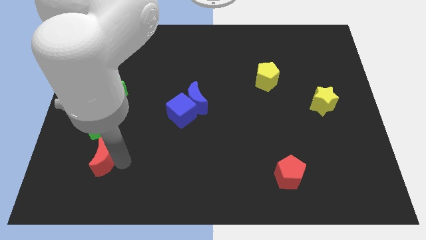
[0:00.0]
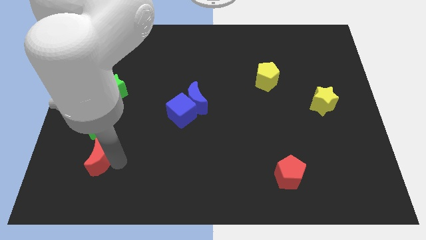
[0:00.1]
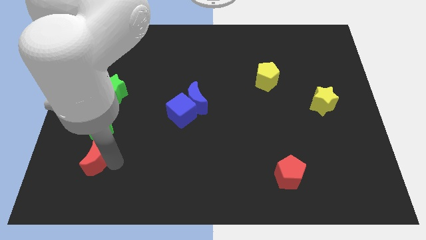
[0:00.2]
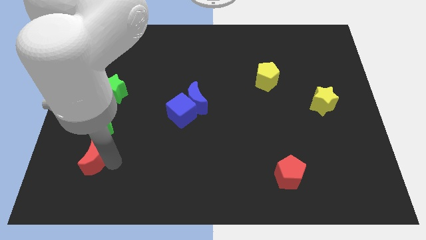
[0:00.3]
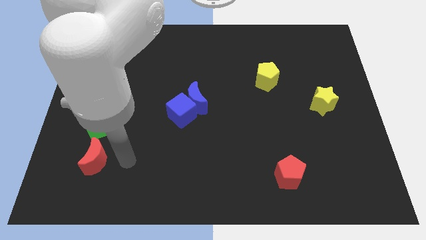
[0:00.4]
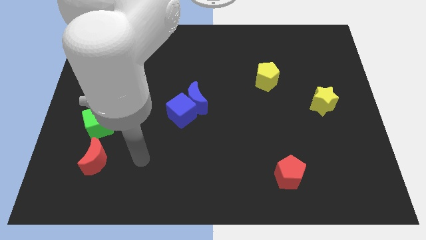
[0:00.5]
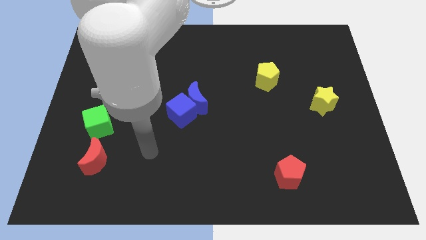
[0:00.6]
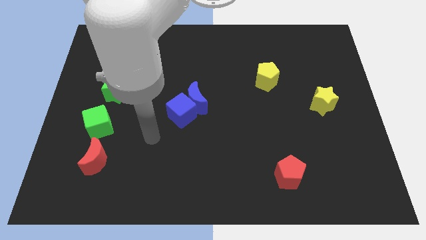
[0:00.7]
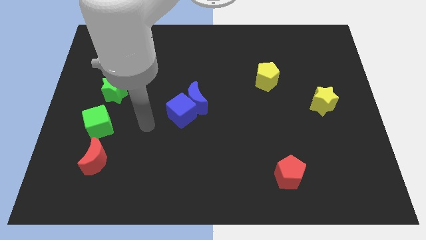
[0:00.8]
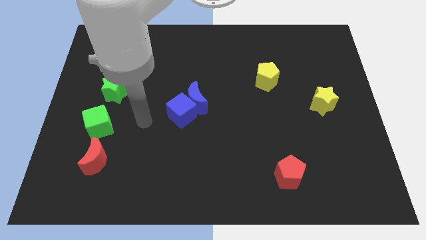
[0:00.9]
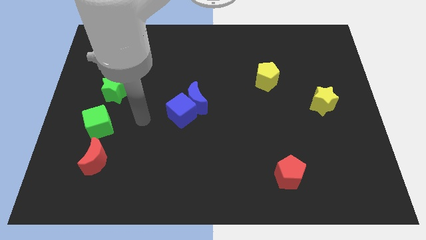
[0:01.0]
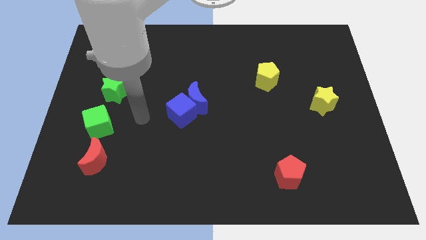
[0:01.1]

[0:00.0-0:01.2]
move your arm away from the red moon

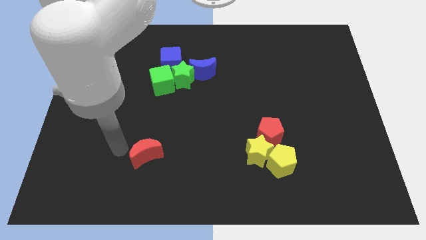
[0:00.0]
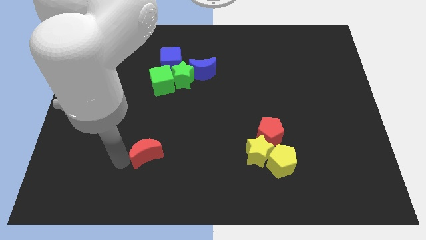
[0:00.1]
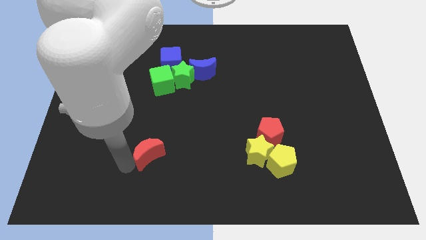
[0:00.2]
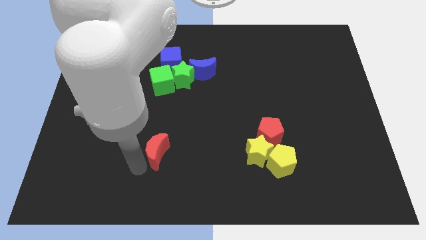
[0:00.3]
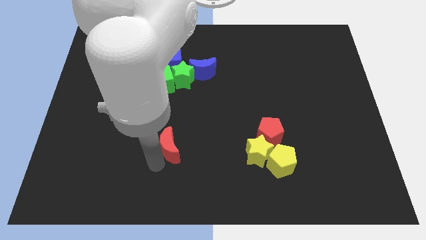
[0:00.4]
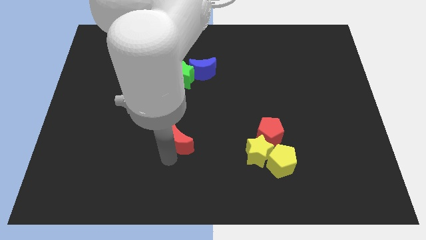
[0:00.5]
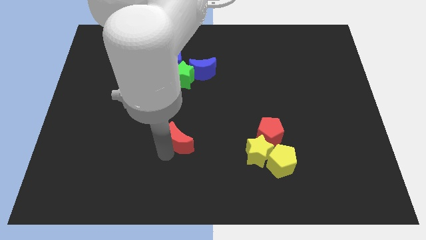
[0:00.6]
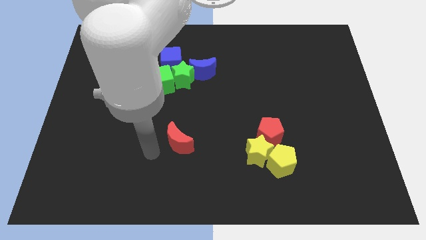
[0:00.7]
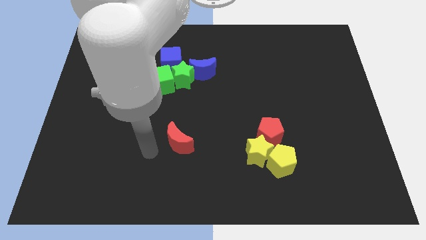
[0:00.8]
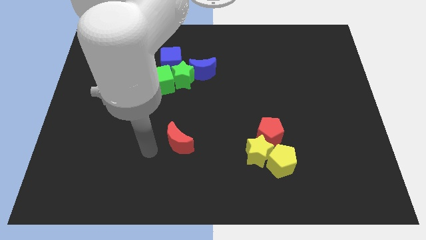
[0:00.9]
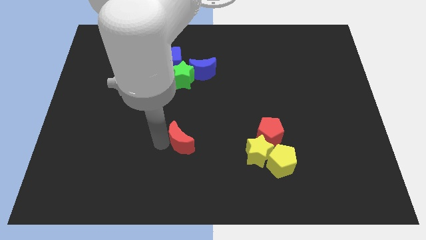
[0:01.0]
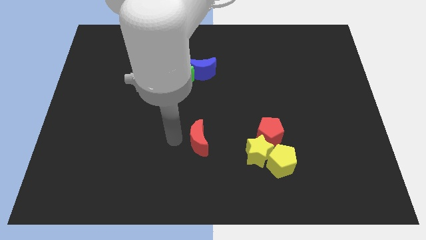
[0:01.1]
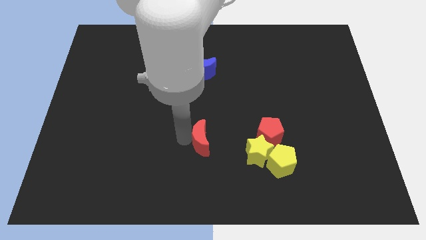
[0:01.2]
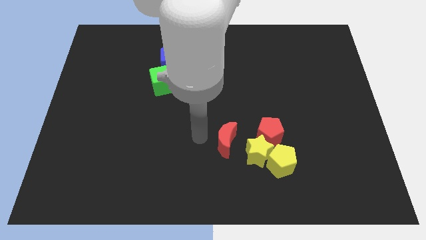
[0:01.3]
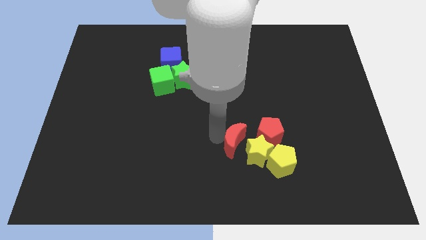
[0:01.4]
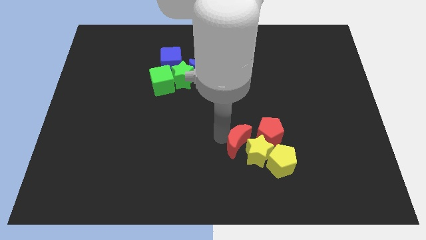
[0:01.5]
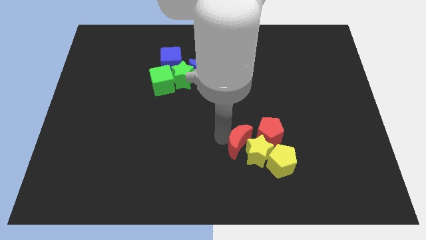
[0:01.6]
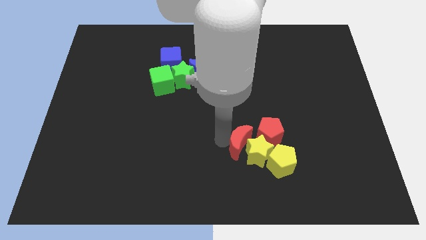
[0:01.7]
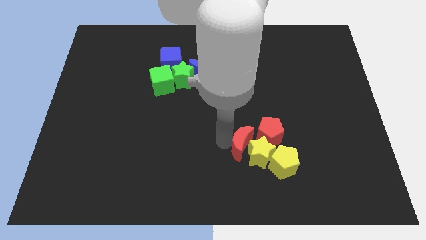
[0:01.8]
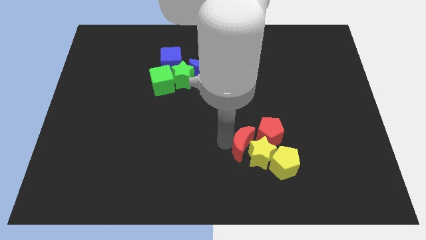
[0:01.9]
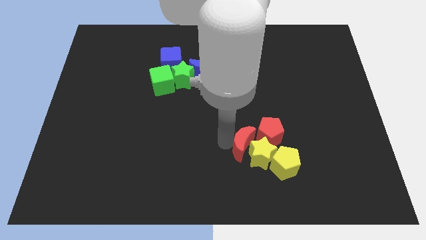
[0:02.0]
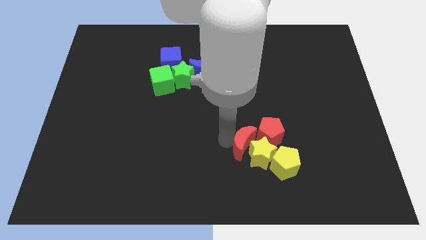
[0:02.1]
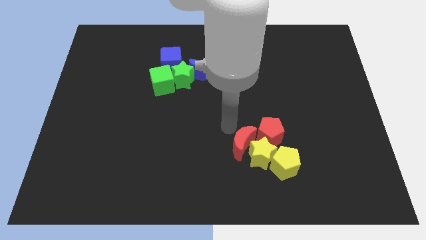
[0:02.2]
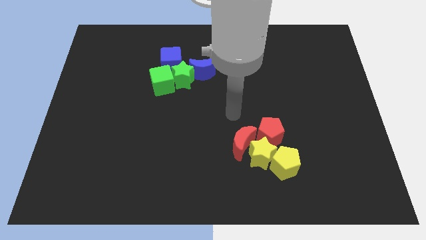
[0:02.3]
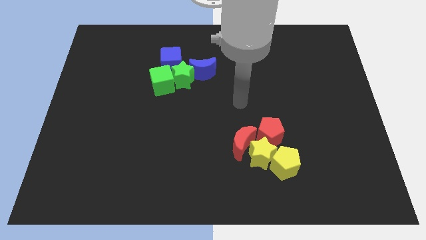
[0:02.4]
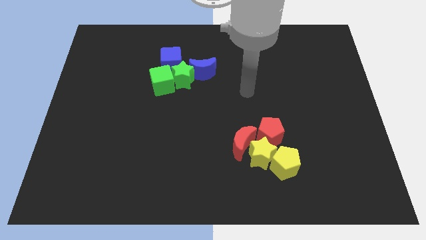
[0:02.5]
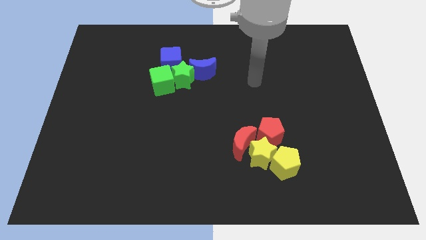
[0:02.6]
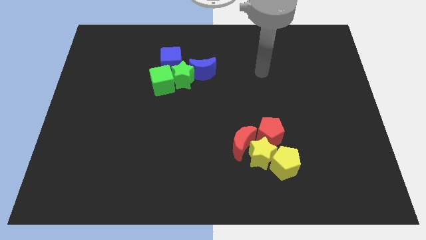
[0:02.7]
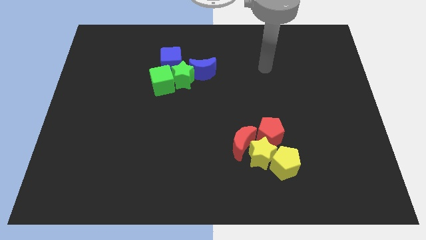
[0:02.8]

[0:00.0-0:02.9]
push the red crescent into the yellow star

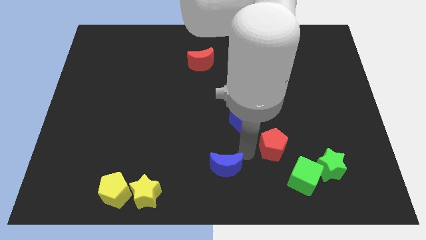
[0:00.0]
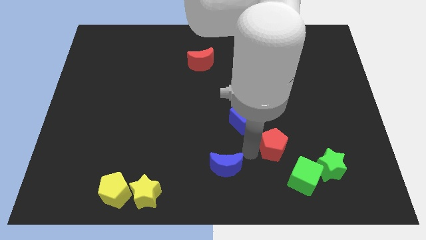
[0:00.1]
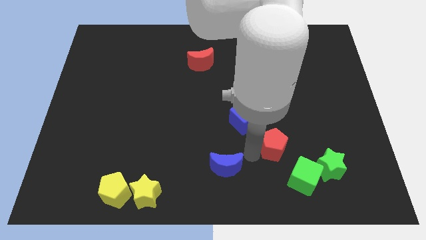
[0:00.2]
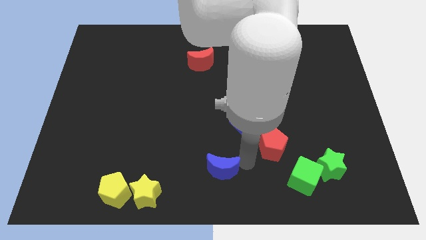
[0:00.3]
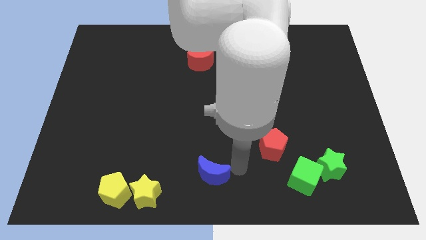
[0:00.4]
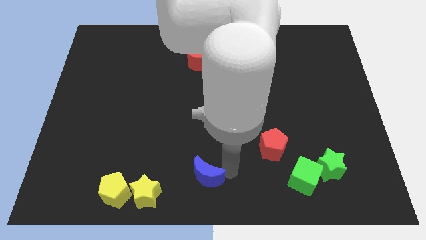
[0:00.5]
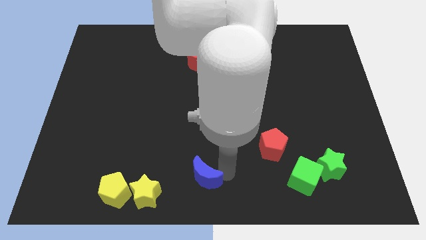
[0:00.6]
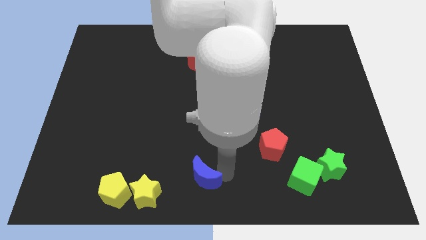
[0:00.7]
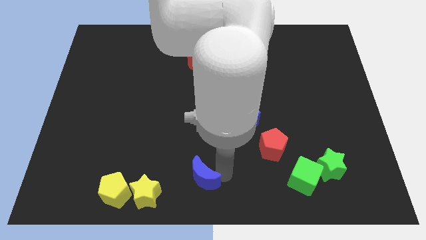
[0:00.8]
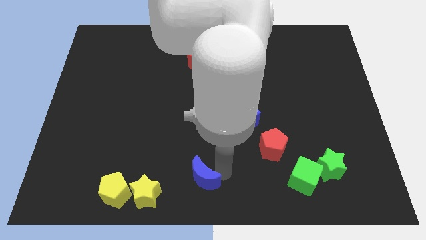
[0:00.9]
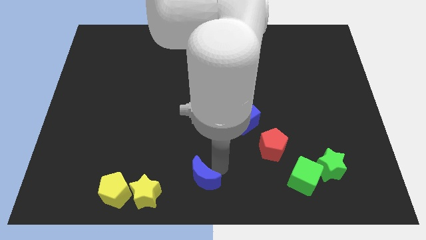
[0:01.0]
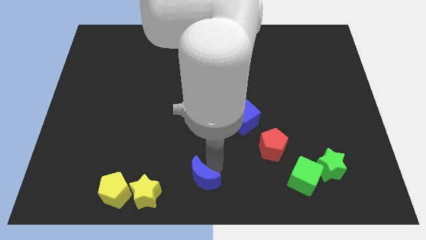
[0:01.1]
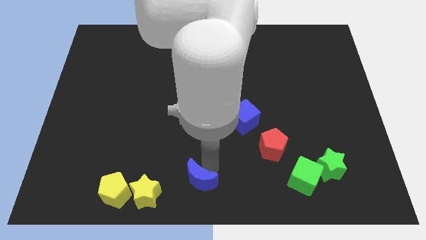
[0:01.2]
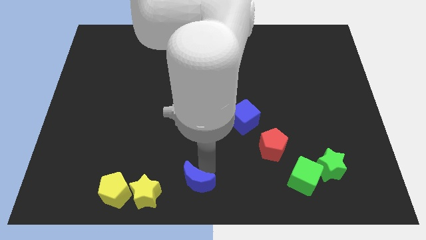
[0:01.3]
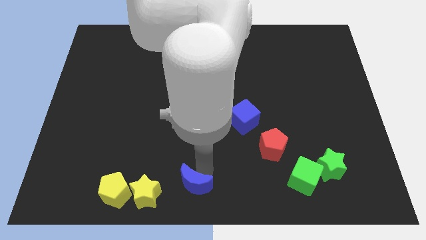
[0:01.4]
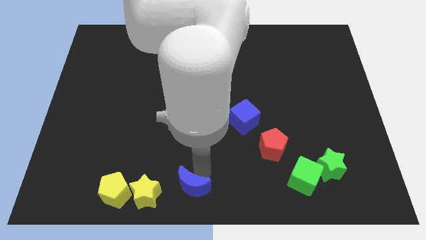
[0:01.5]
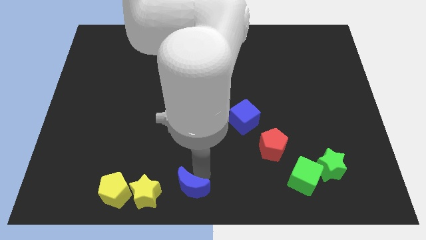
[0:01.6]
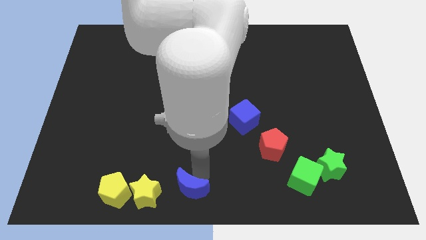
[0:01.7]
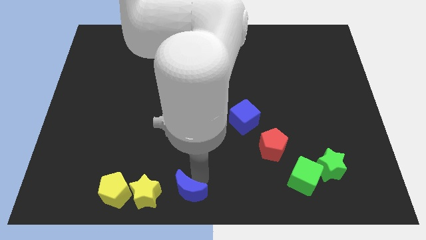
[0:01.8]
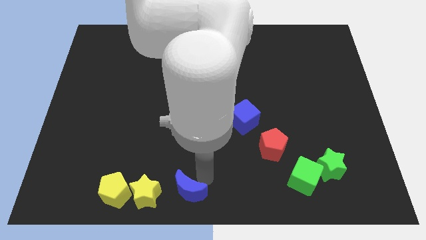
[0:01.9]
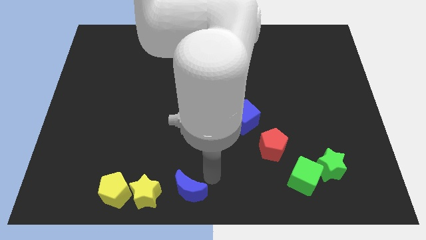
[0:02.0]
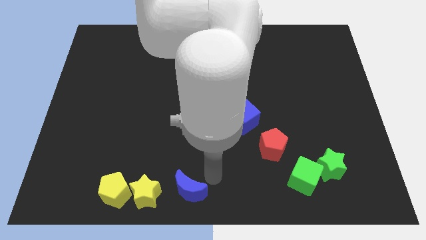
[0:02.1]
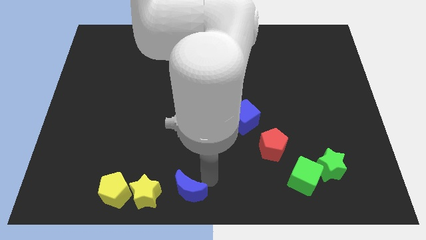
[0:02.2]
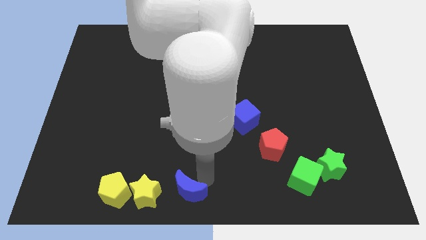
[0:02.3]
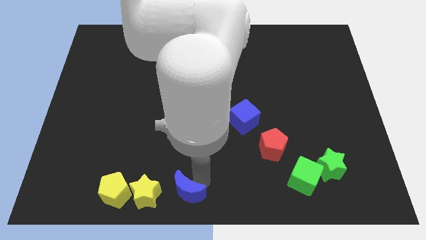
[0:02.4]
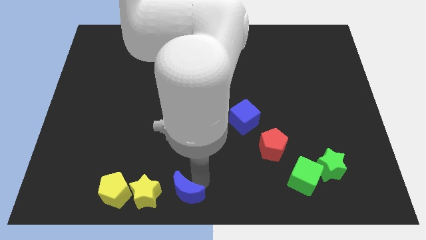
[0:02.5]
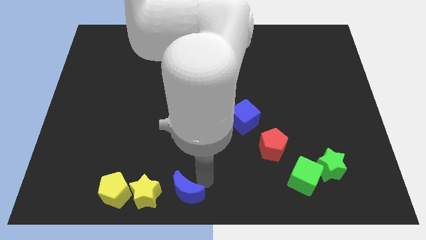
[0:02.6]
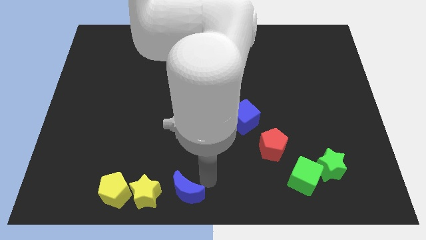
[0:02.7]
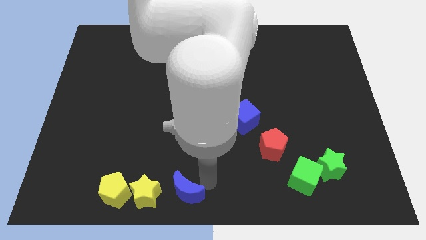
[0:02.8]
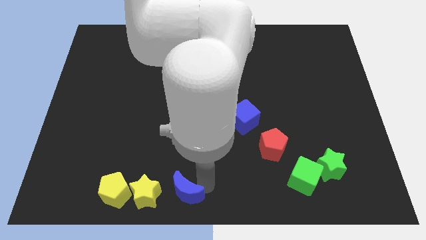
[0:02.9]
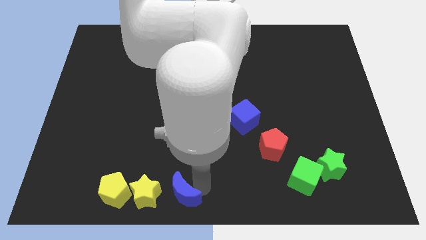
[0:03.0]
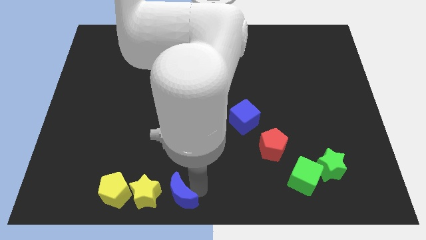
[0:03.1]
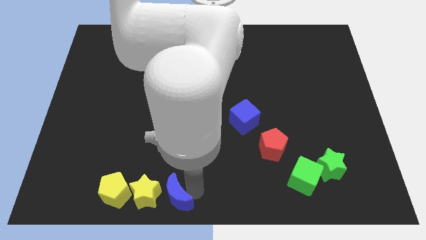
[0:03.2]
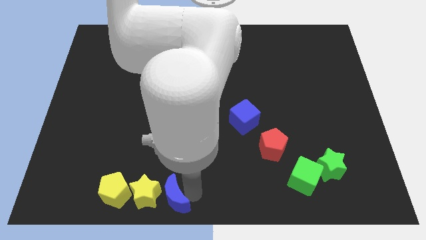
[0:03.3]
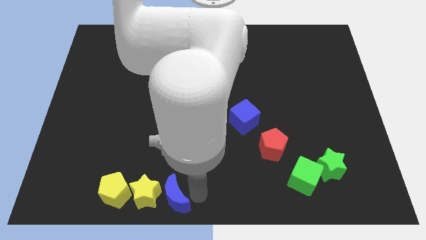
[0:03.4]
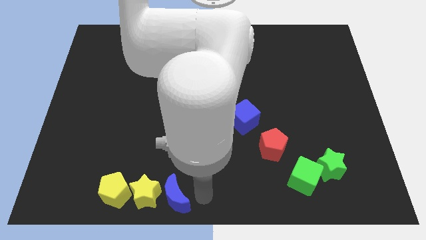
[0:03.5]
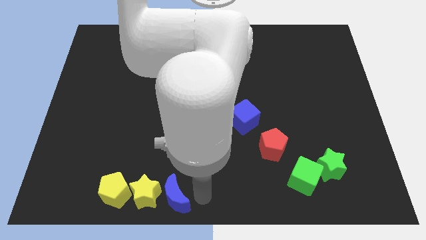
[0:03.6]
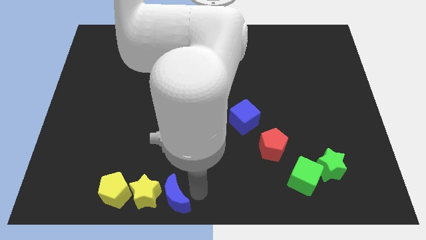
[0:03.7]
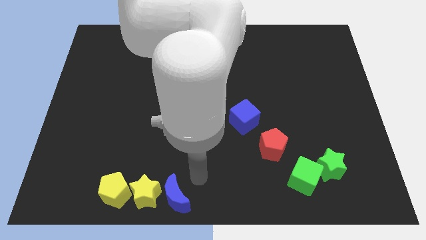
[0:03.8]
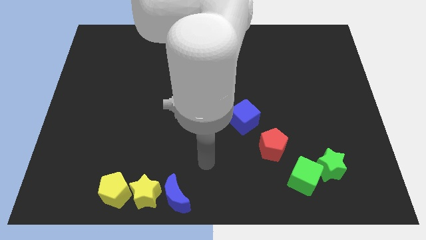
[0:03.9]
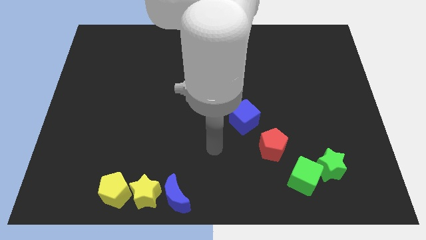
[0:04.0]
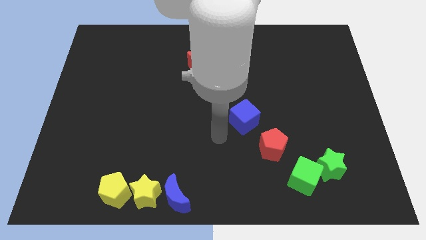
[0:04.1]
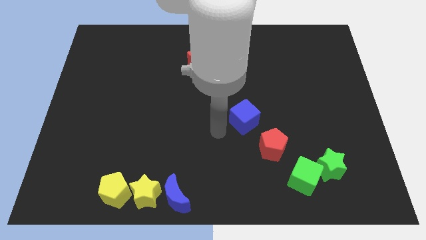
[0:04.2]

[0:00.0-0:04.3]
move the blue moon to the right of the yellow star

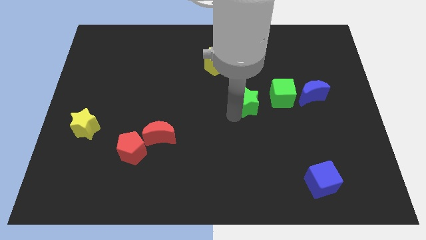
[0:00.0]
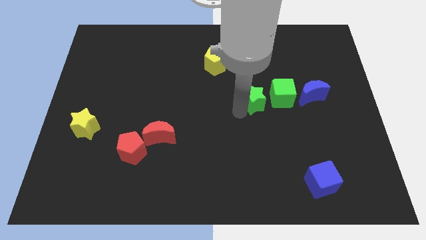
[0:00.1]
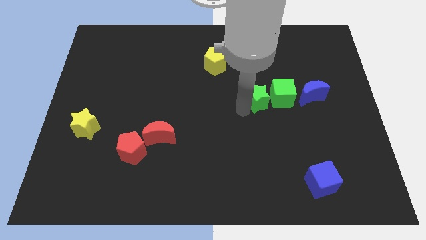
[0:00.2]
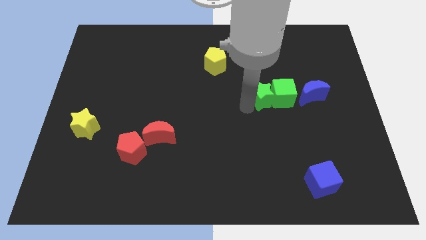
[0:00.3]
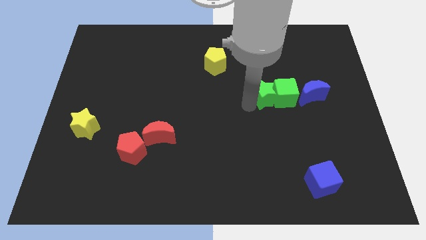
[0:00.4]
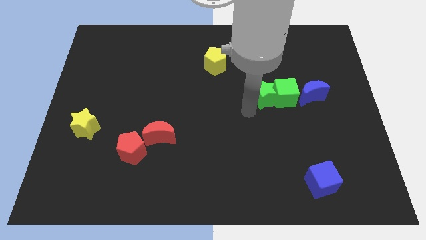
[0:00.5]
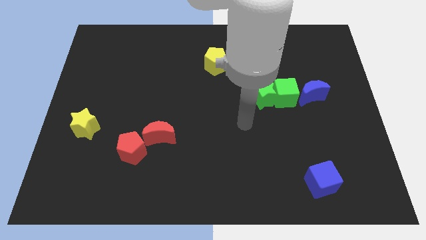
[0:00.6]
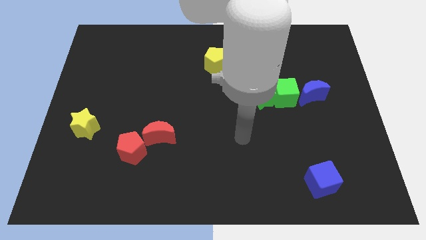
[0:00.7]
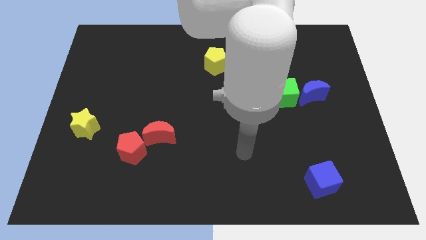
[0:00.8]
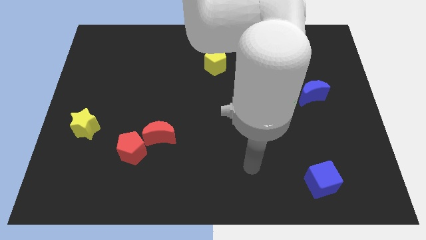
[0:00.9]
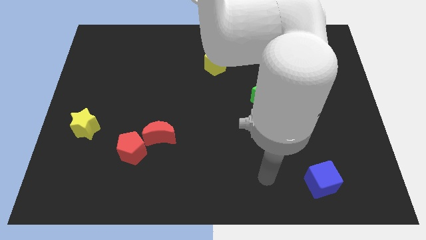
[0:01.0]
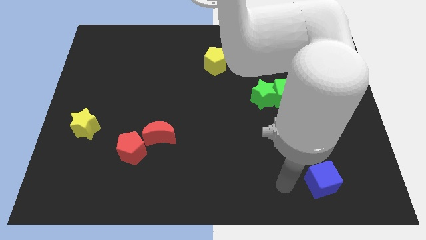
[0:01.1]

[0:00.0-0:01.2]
move your arm to the left of the blue cube
